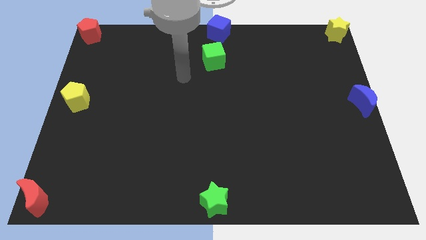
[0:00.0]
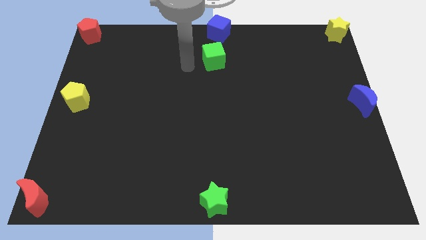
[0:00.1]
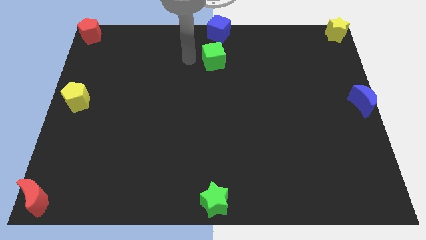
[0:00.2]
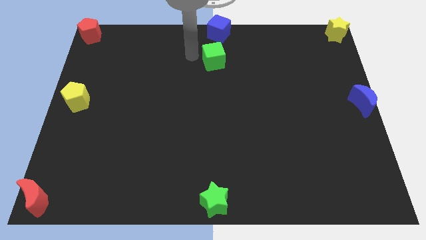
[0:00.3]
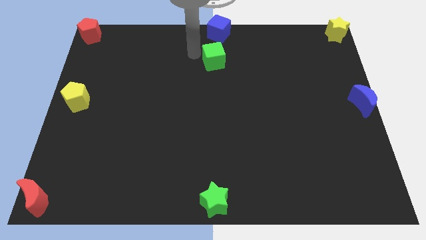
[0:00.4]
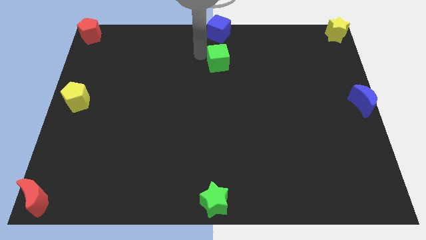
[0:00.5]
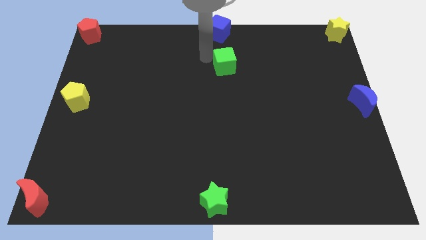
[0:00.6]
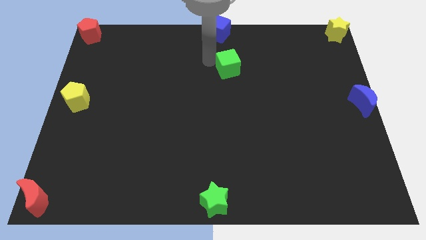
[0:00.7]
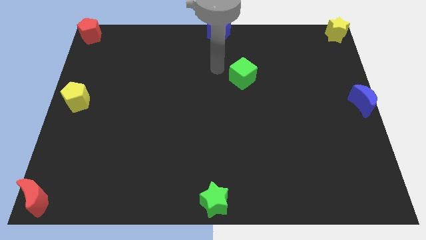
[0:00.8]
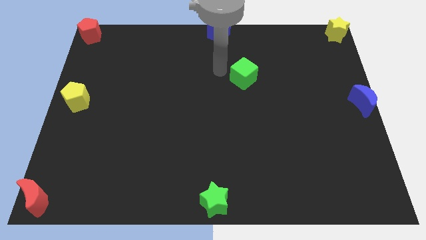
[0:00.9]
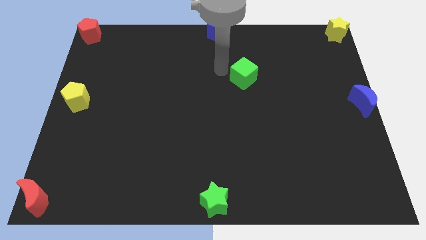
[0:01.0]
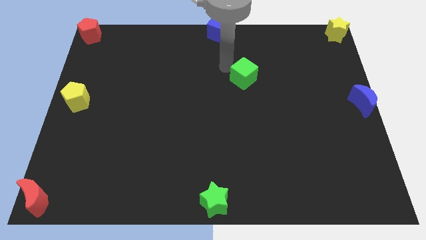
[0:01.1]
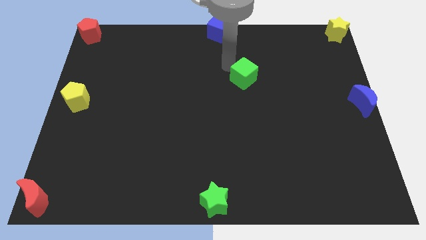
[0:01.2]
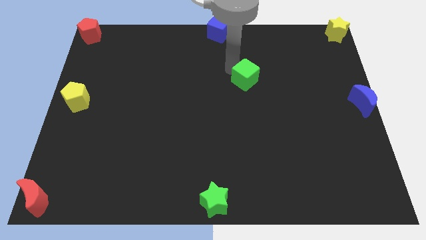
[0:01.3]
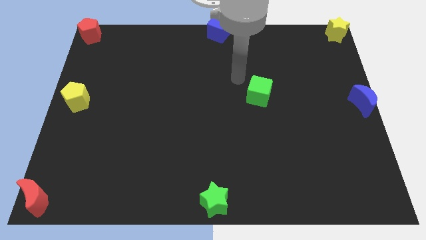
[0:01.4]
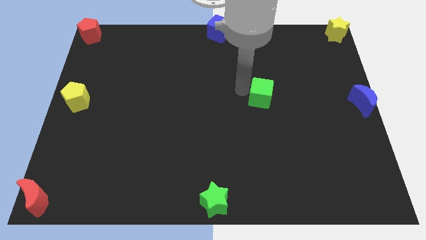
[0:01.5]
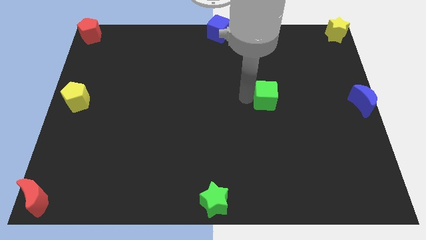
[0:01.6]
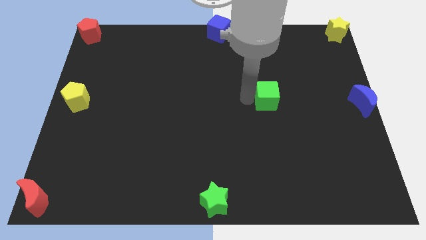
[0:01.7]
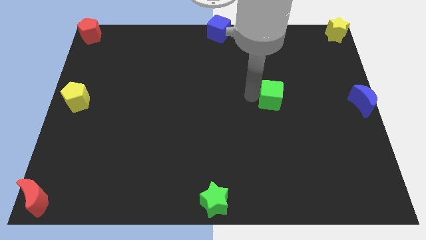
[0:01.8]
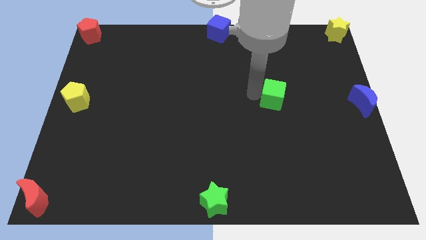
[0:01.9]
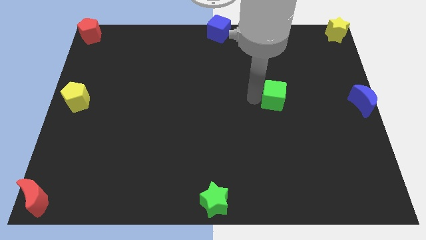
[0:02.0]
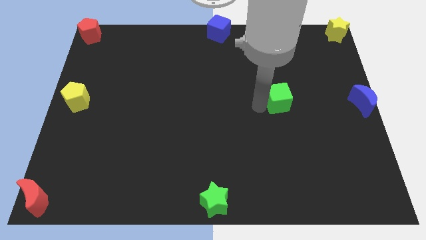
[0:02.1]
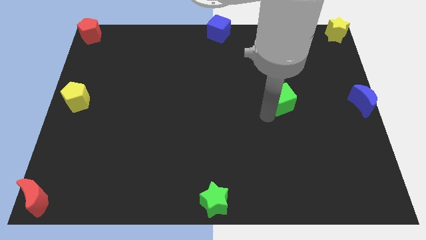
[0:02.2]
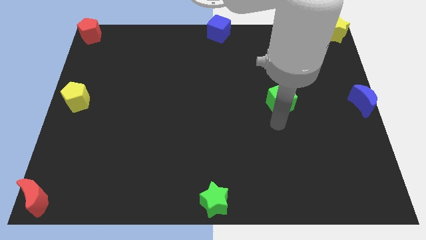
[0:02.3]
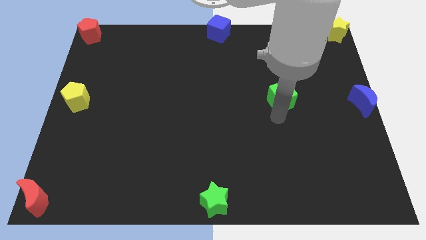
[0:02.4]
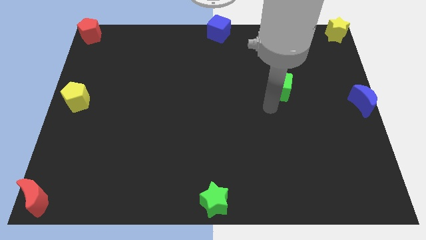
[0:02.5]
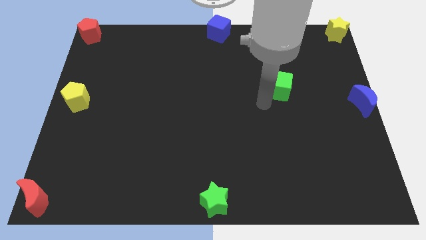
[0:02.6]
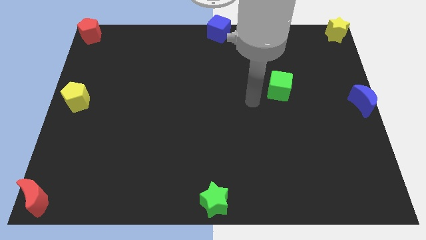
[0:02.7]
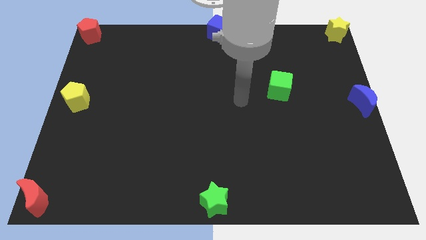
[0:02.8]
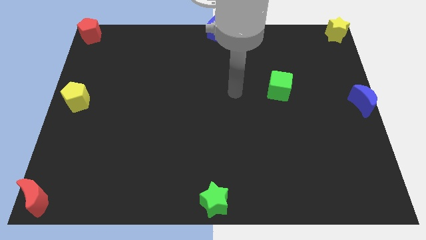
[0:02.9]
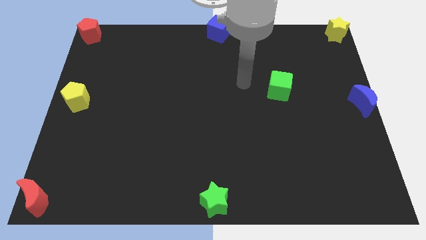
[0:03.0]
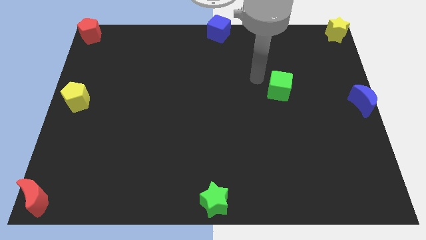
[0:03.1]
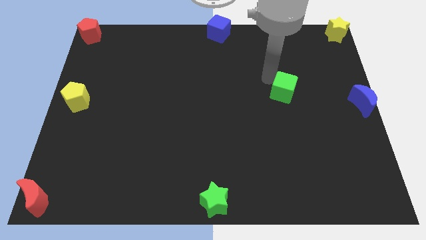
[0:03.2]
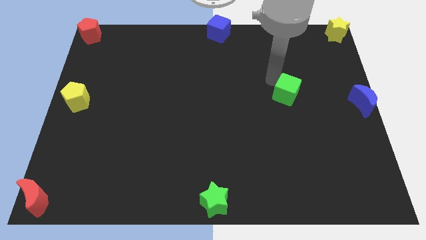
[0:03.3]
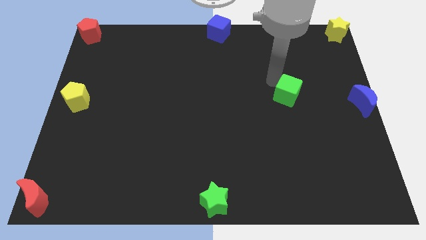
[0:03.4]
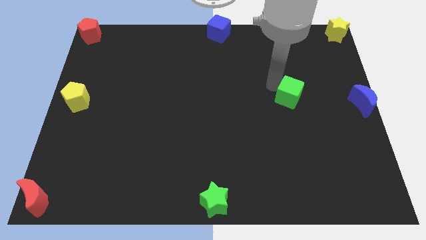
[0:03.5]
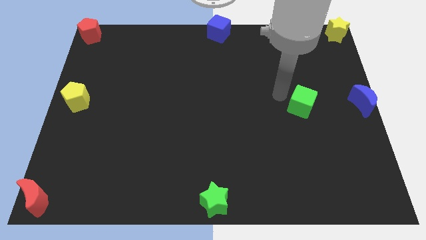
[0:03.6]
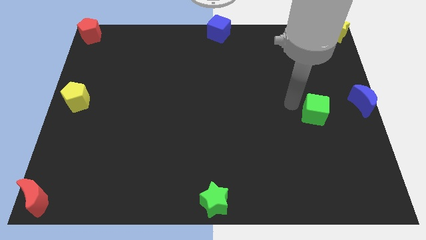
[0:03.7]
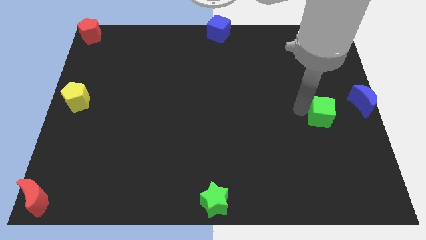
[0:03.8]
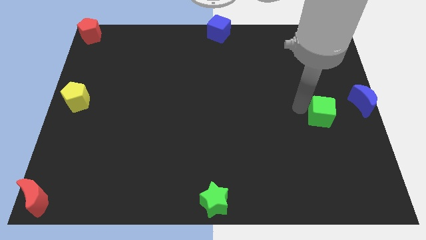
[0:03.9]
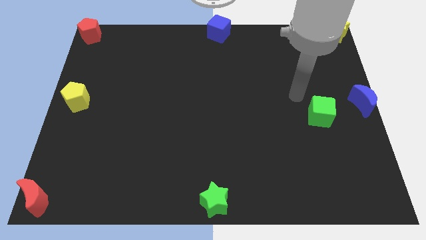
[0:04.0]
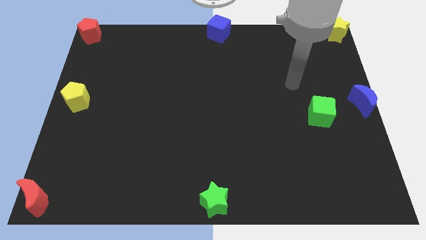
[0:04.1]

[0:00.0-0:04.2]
move the green cube to the left of the blue moon

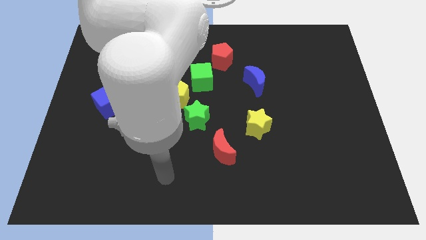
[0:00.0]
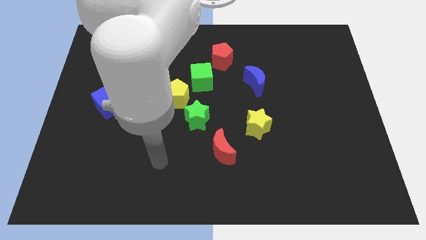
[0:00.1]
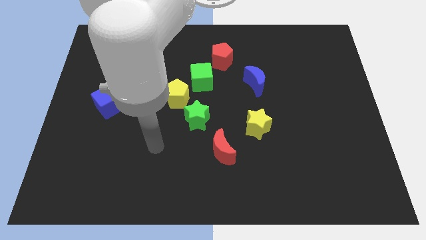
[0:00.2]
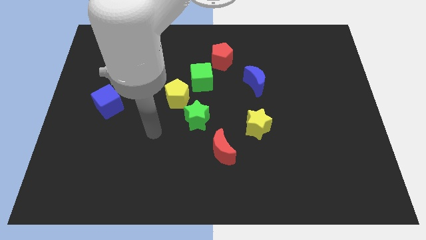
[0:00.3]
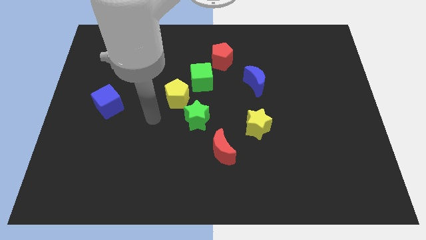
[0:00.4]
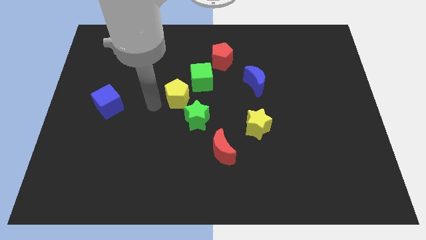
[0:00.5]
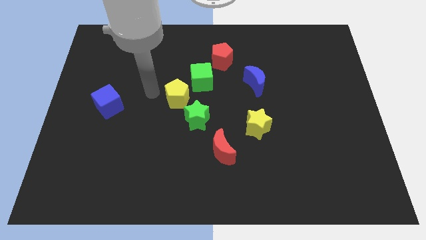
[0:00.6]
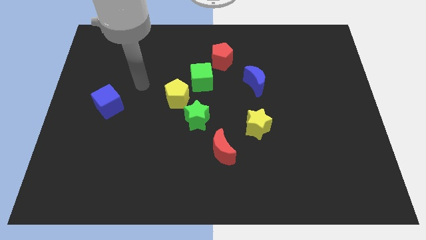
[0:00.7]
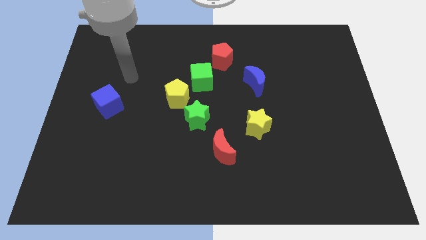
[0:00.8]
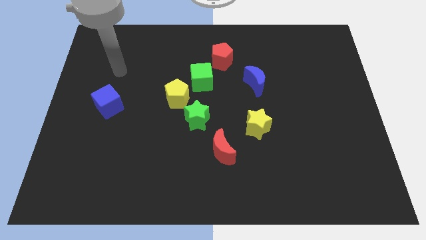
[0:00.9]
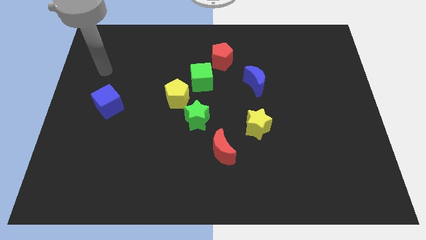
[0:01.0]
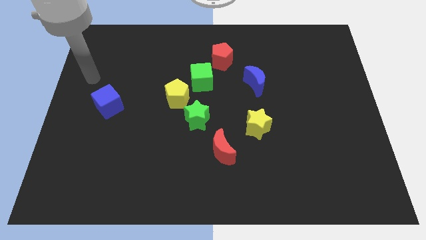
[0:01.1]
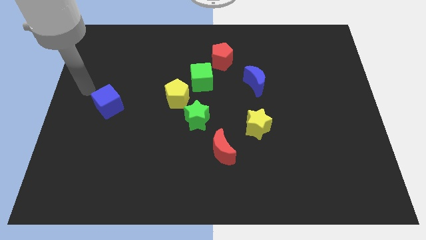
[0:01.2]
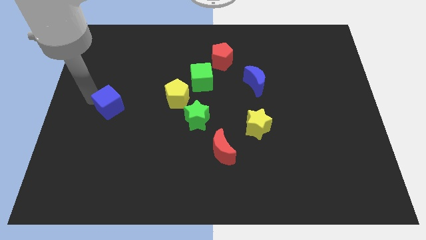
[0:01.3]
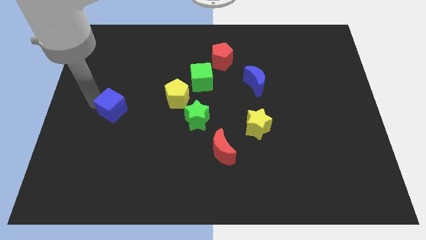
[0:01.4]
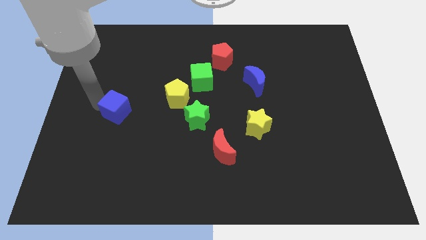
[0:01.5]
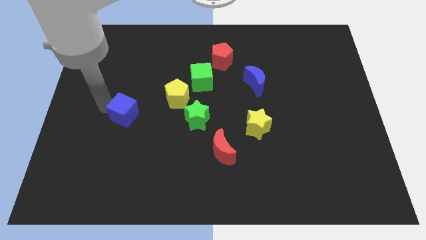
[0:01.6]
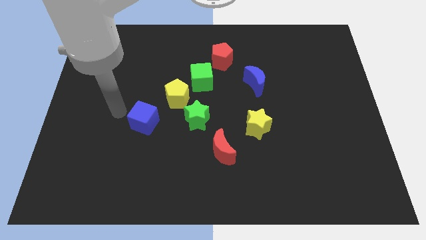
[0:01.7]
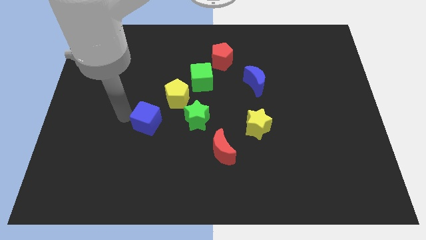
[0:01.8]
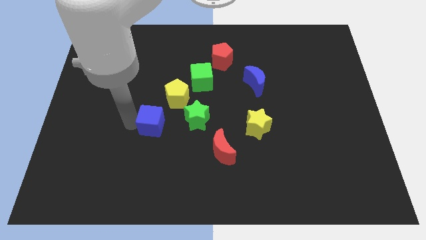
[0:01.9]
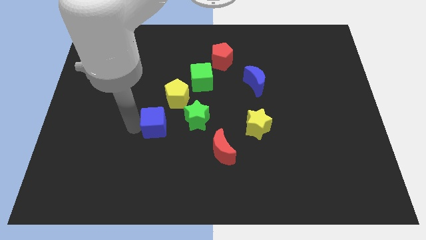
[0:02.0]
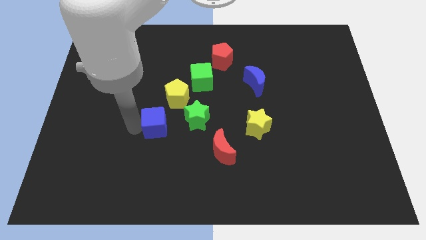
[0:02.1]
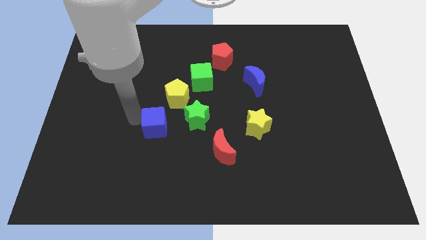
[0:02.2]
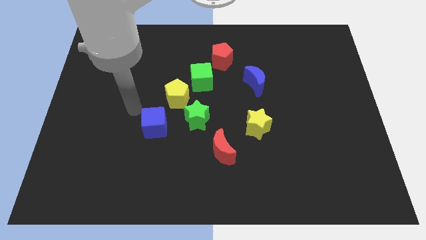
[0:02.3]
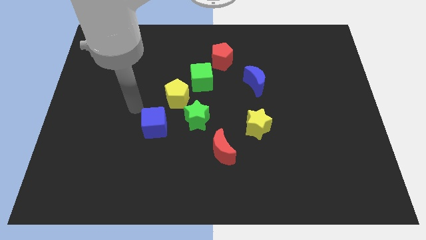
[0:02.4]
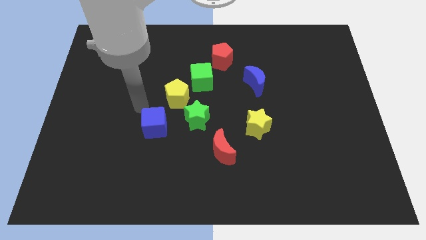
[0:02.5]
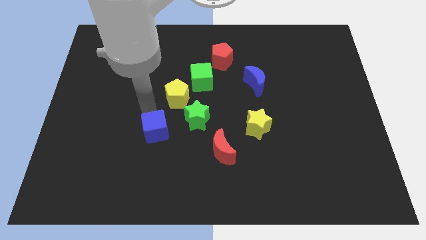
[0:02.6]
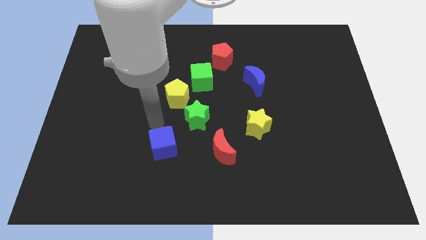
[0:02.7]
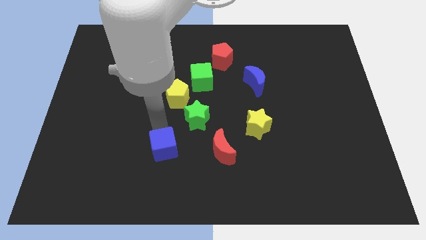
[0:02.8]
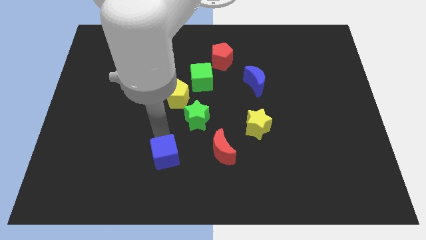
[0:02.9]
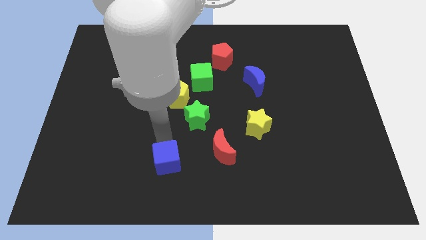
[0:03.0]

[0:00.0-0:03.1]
slide blue cube down to the left of red moon

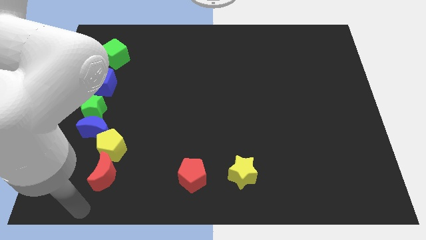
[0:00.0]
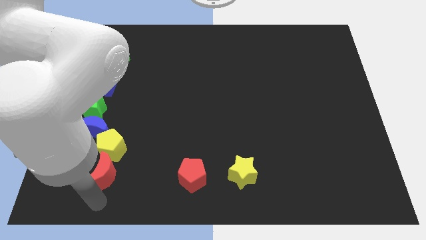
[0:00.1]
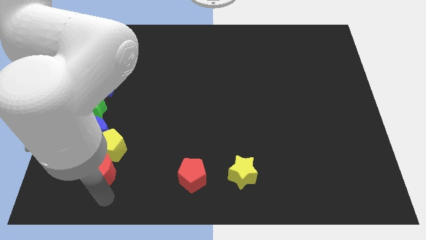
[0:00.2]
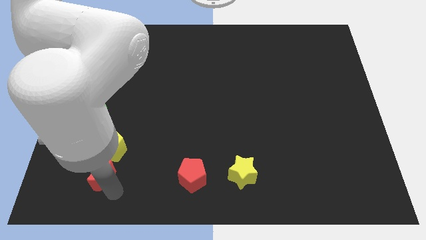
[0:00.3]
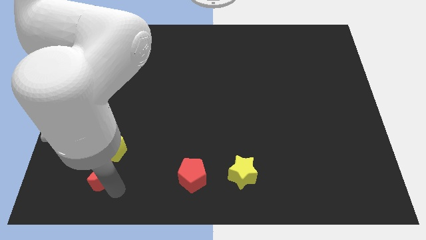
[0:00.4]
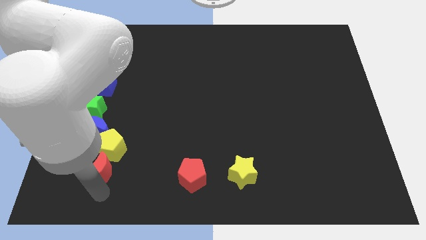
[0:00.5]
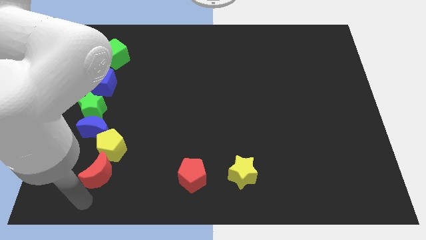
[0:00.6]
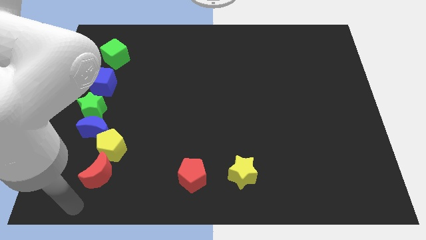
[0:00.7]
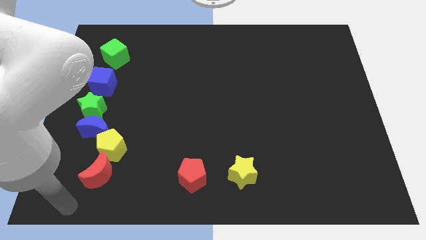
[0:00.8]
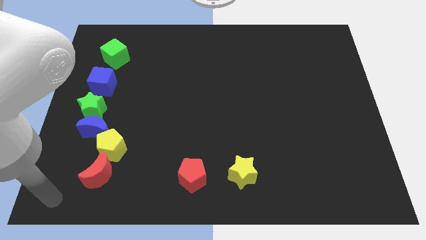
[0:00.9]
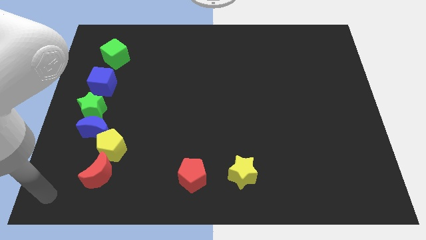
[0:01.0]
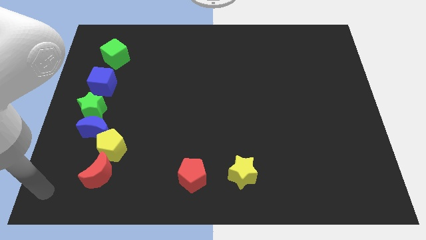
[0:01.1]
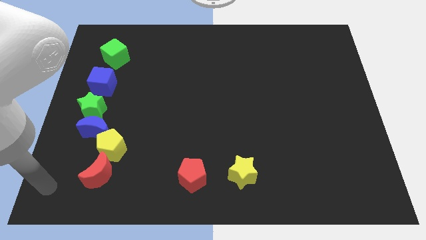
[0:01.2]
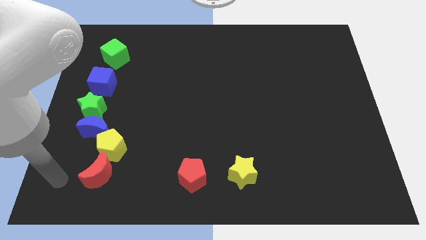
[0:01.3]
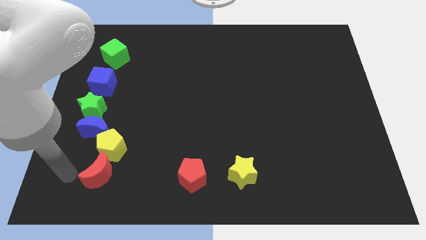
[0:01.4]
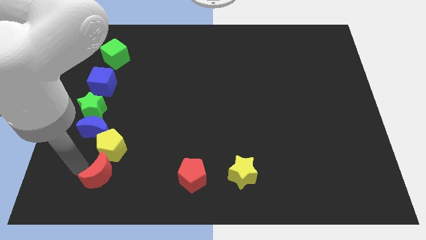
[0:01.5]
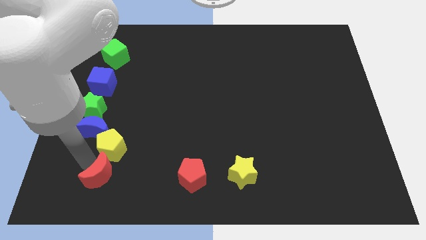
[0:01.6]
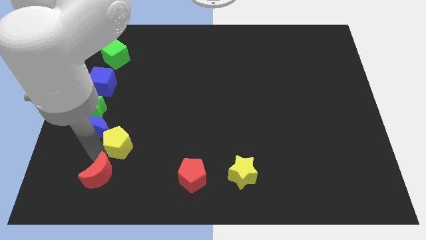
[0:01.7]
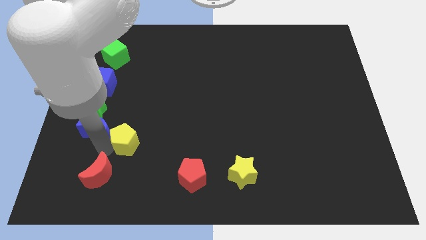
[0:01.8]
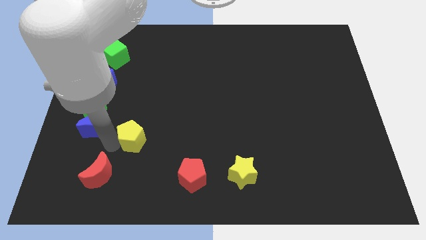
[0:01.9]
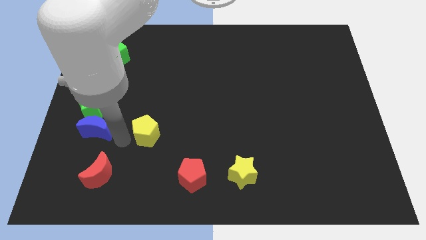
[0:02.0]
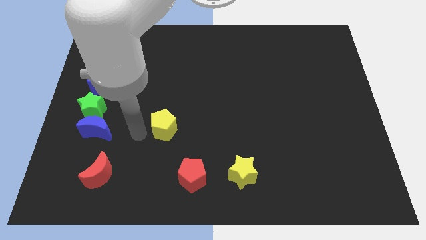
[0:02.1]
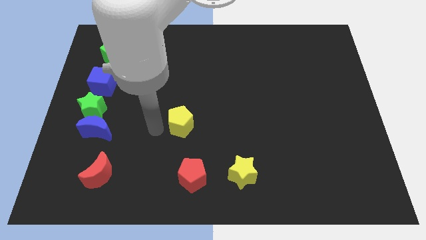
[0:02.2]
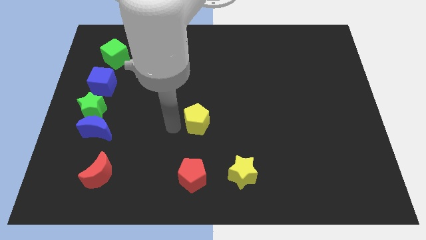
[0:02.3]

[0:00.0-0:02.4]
place the yellow pentagon above the red pentagon
